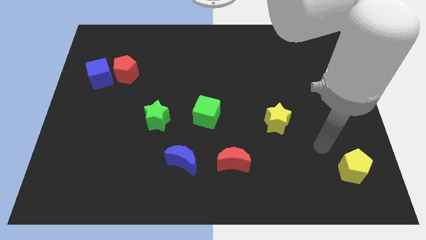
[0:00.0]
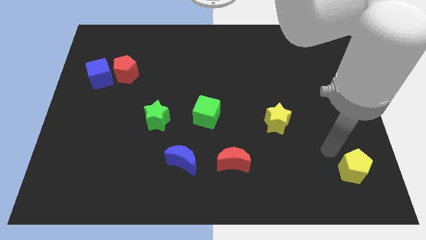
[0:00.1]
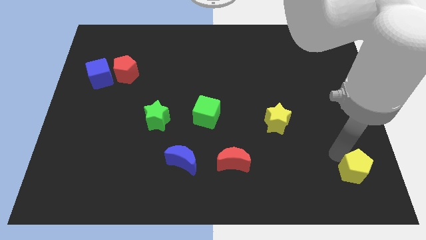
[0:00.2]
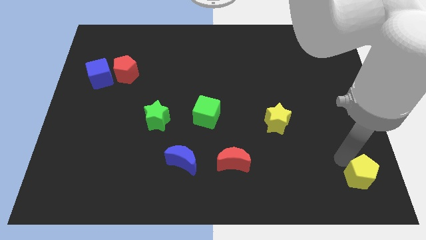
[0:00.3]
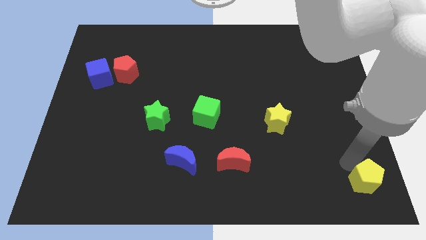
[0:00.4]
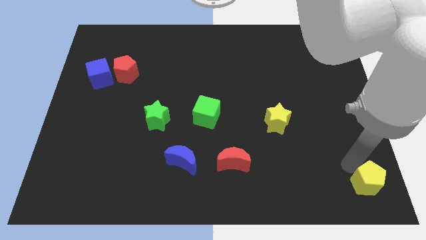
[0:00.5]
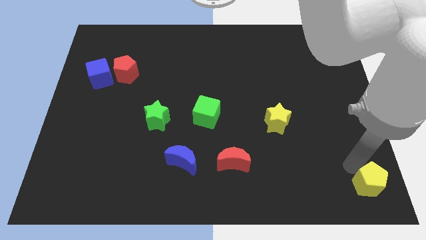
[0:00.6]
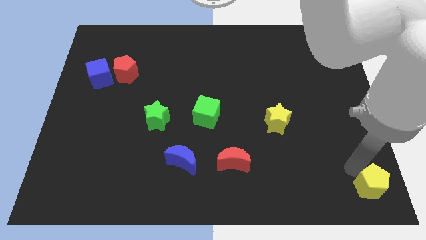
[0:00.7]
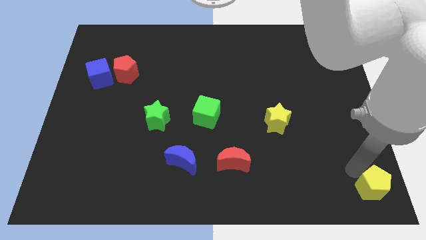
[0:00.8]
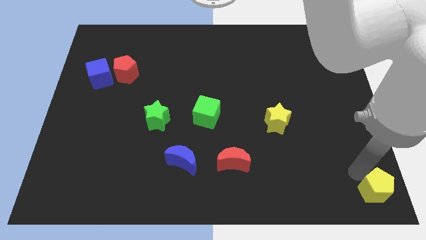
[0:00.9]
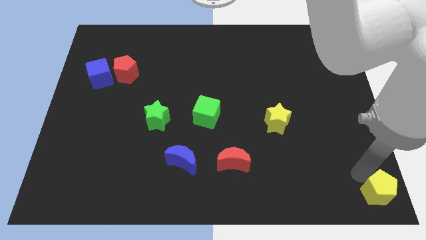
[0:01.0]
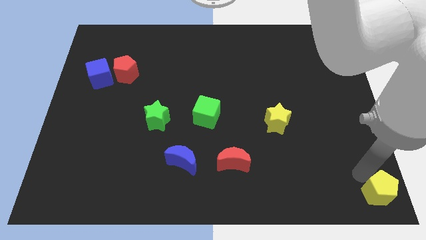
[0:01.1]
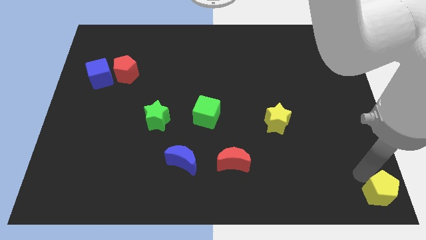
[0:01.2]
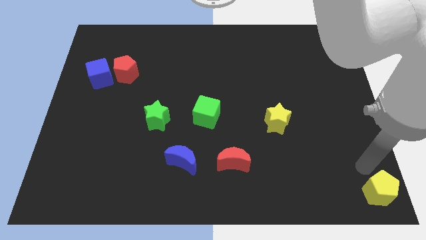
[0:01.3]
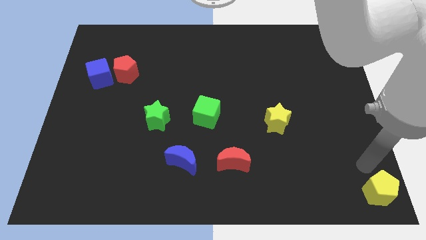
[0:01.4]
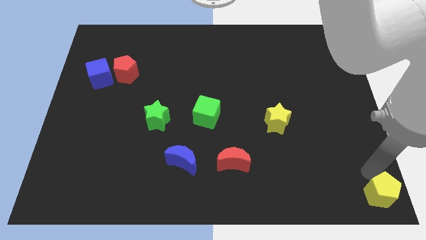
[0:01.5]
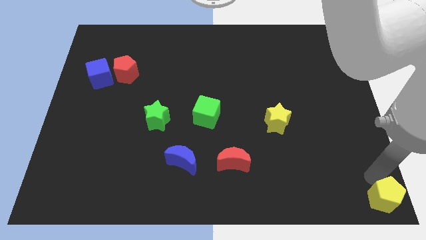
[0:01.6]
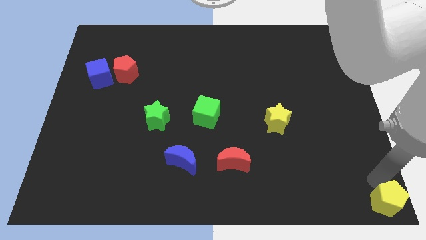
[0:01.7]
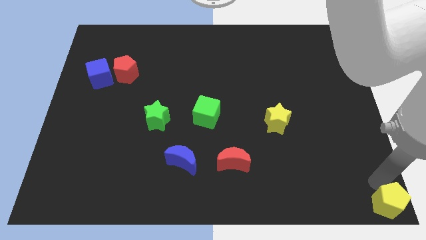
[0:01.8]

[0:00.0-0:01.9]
push yellow pentagon to the bottom right corner

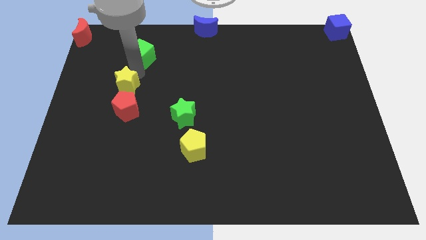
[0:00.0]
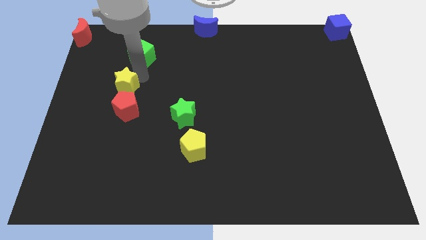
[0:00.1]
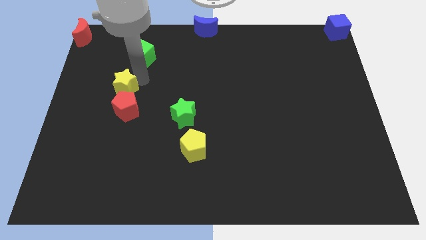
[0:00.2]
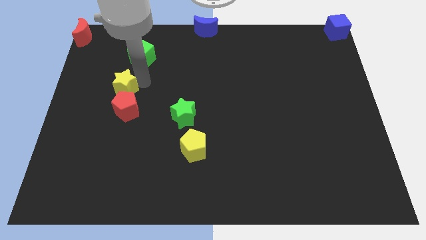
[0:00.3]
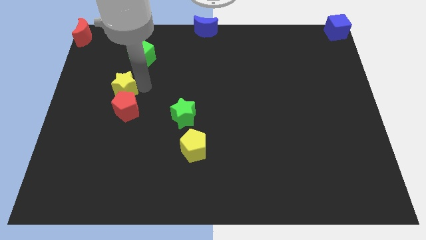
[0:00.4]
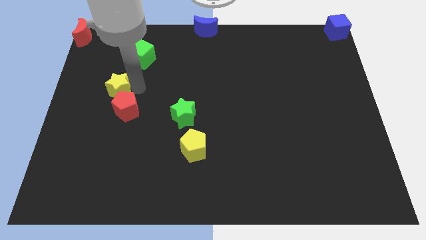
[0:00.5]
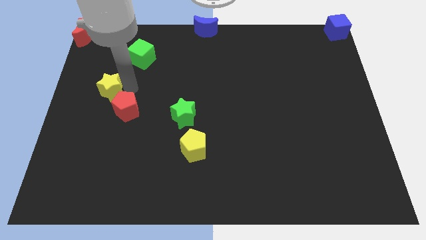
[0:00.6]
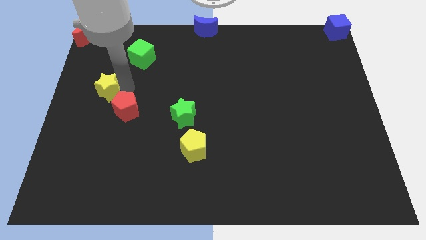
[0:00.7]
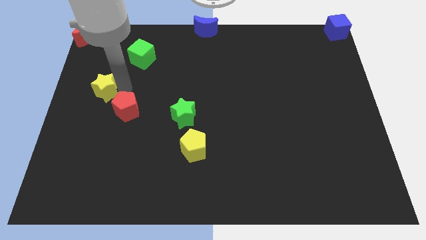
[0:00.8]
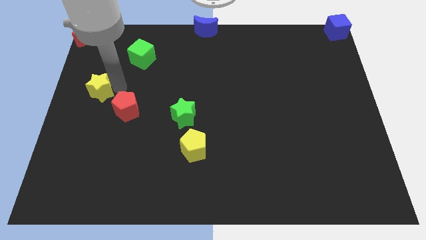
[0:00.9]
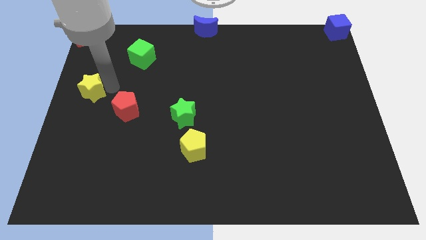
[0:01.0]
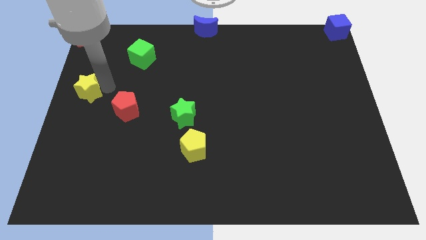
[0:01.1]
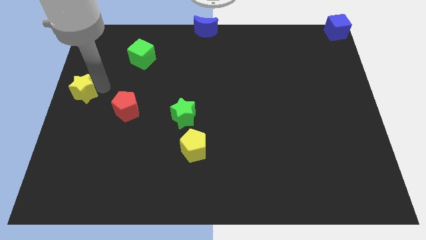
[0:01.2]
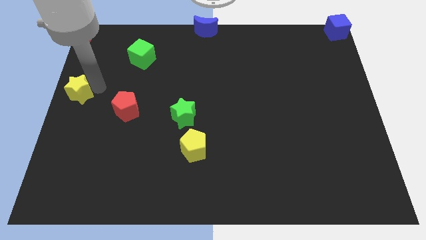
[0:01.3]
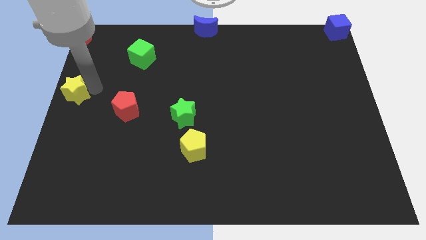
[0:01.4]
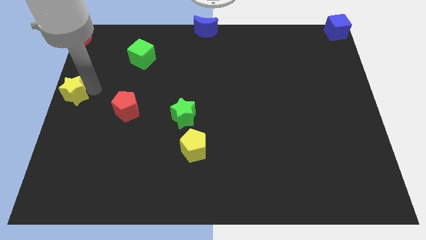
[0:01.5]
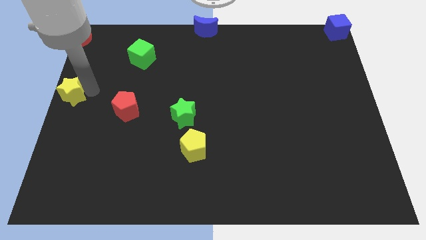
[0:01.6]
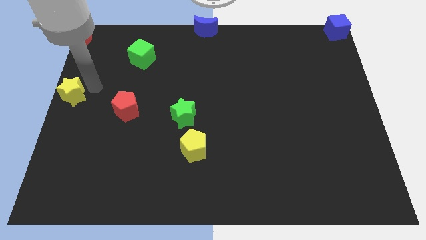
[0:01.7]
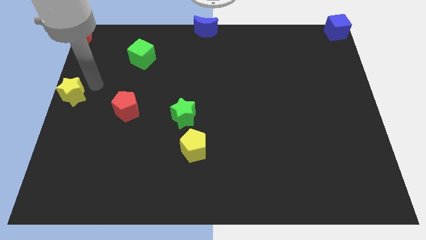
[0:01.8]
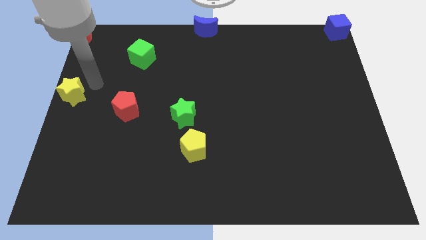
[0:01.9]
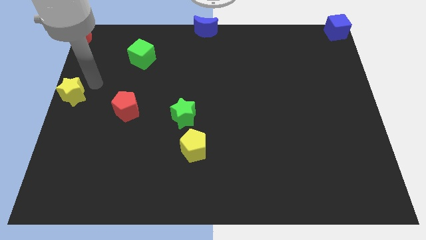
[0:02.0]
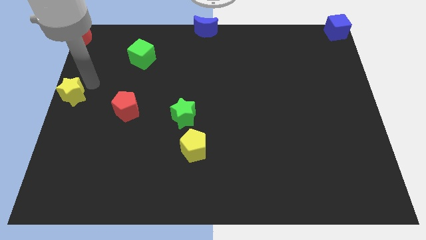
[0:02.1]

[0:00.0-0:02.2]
move the yellow star to the left side of the board

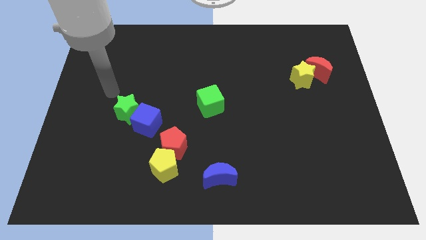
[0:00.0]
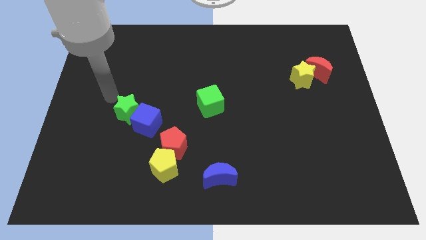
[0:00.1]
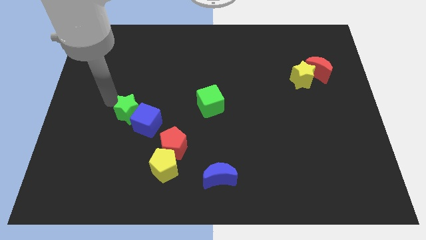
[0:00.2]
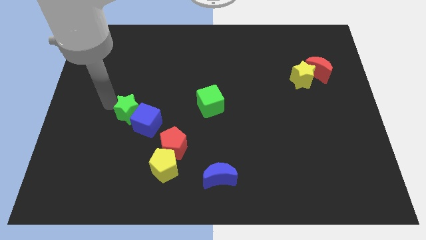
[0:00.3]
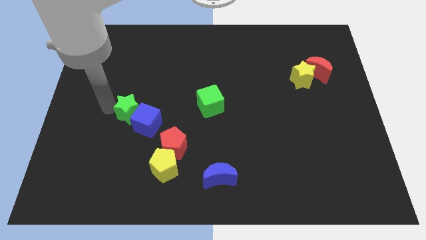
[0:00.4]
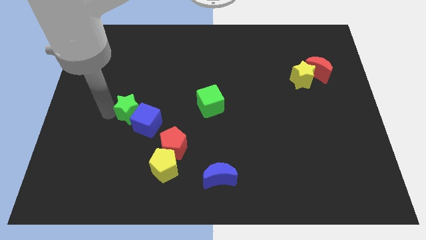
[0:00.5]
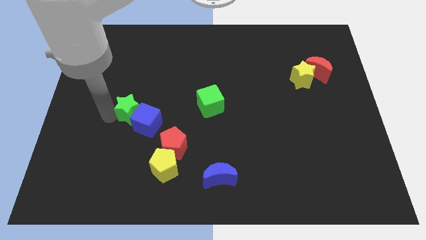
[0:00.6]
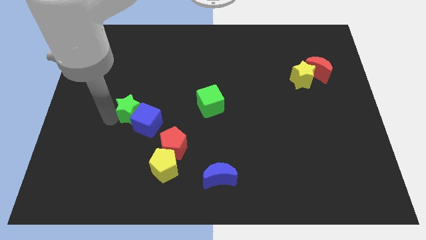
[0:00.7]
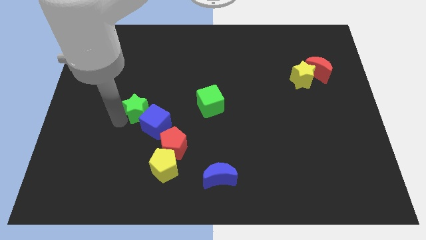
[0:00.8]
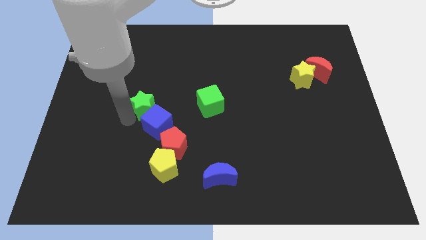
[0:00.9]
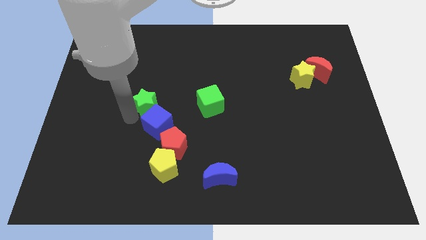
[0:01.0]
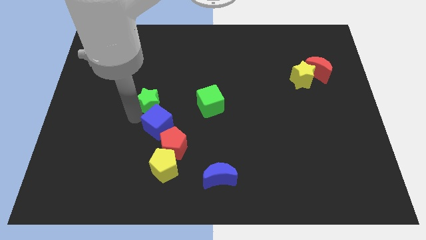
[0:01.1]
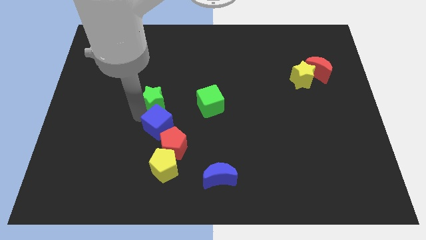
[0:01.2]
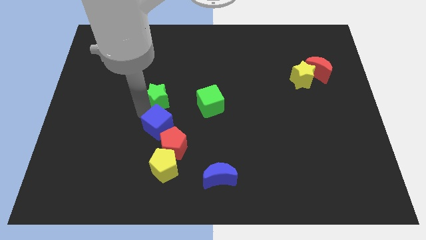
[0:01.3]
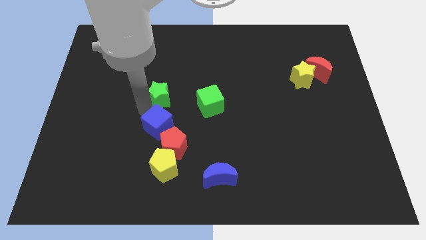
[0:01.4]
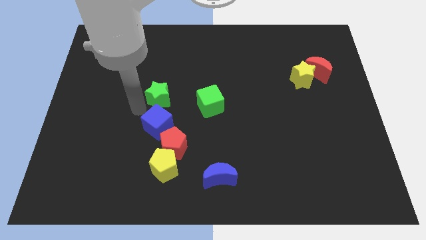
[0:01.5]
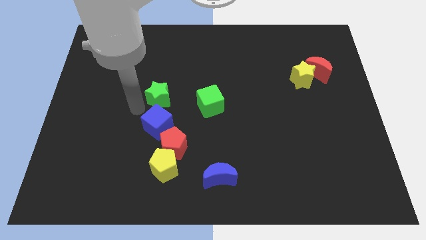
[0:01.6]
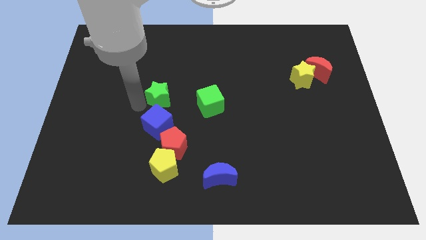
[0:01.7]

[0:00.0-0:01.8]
separate the green star and the blue cube

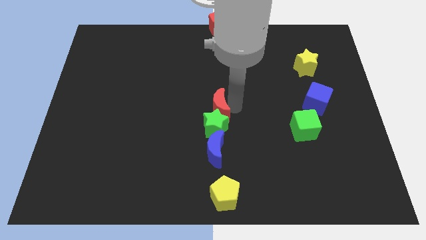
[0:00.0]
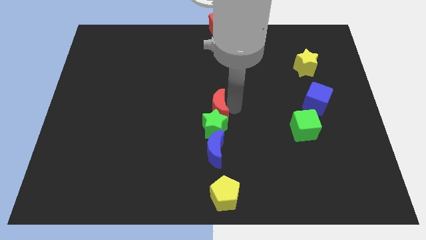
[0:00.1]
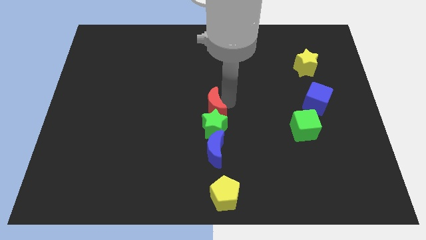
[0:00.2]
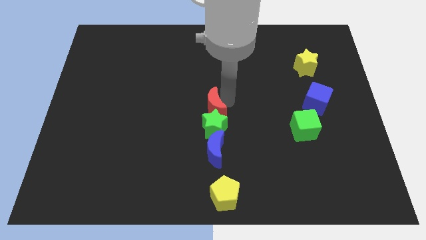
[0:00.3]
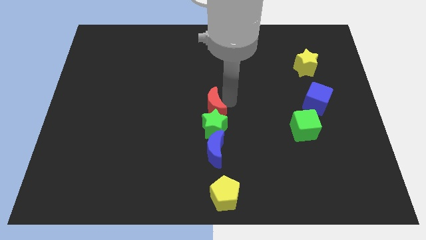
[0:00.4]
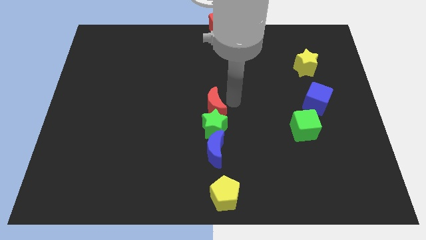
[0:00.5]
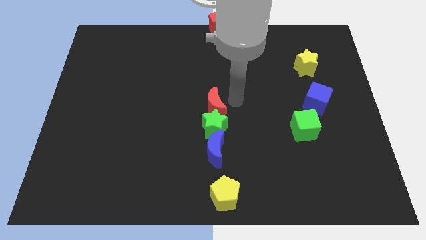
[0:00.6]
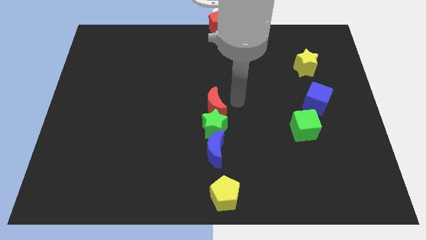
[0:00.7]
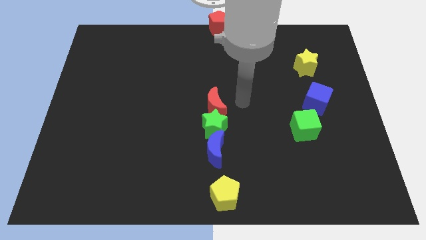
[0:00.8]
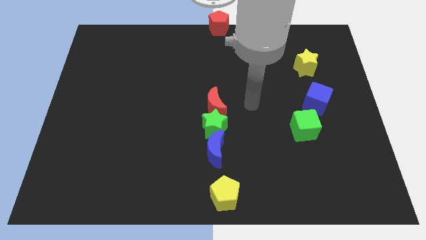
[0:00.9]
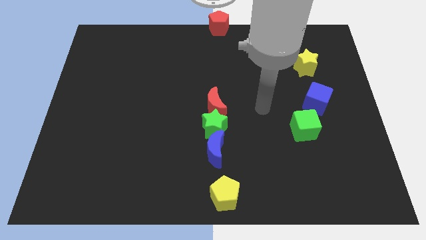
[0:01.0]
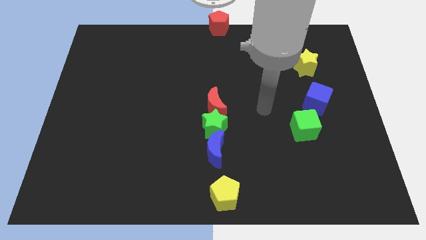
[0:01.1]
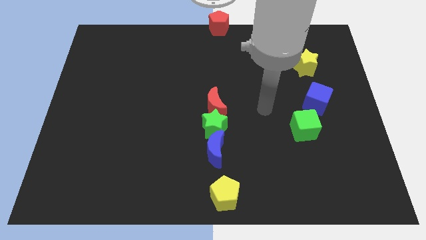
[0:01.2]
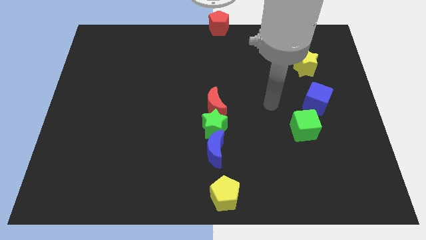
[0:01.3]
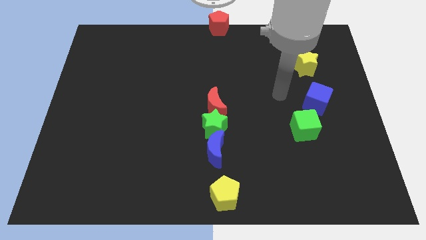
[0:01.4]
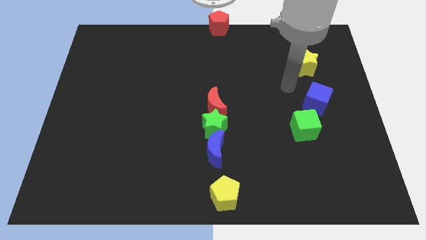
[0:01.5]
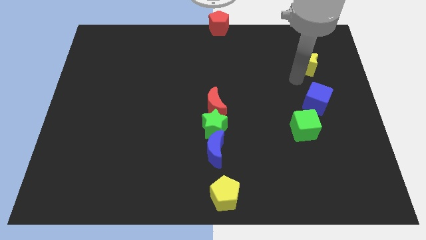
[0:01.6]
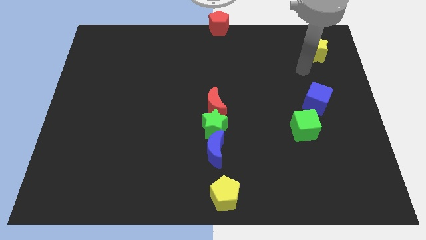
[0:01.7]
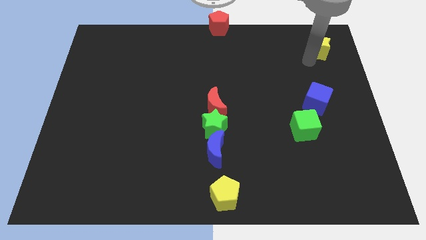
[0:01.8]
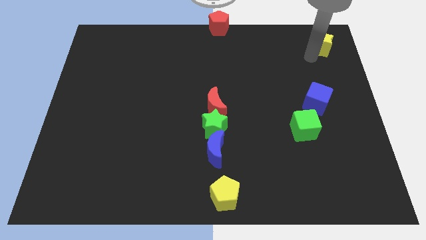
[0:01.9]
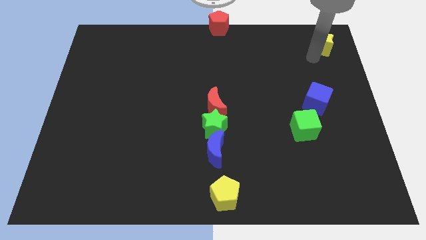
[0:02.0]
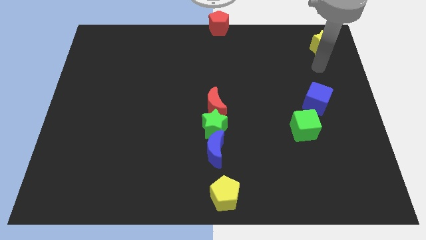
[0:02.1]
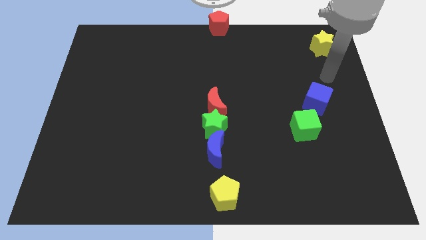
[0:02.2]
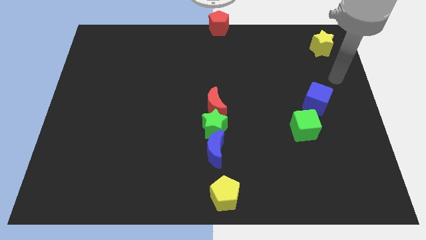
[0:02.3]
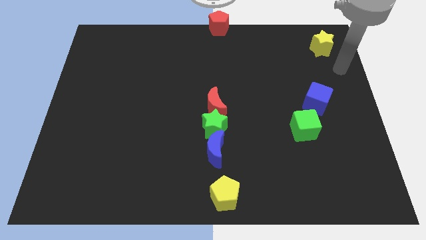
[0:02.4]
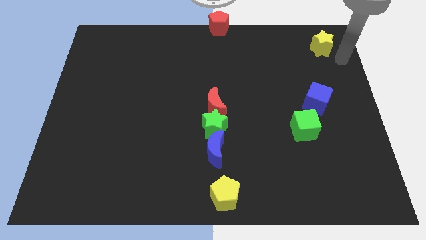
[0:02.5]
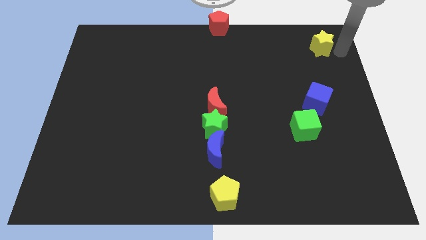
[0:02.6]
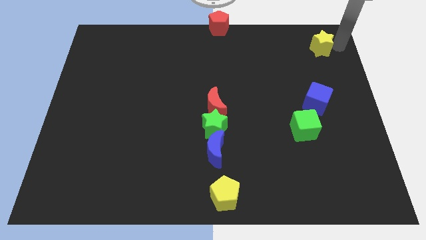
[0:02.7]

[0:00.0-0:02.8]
push the yellow star to the top center
